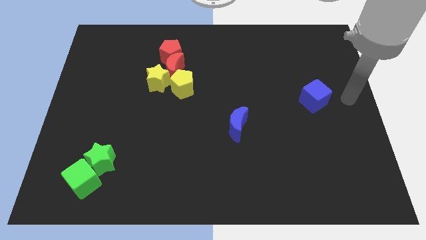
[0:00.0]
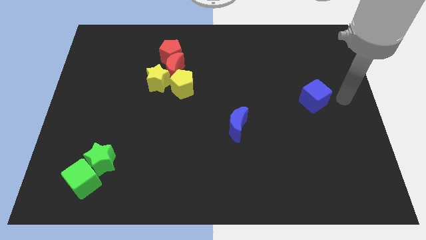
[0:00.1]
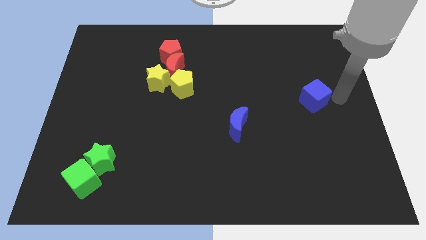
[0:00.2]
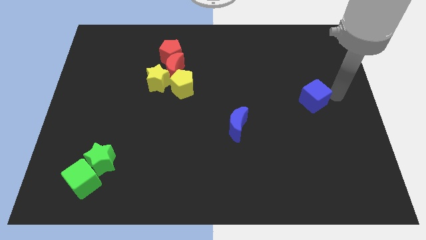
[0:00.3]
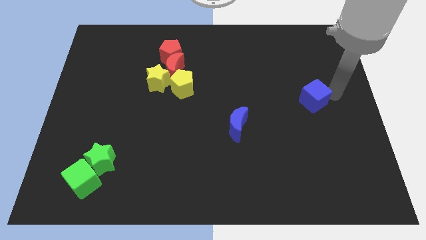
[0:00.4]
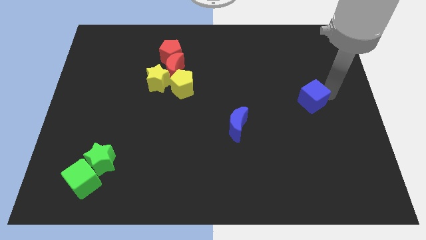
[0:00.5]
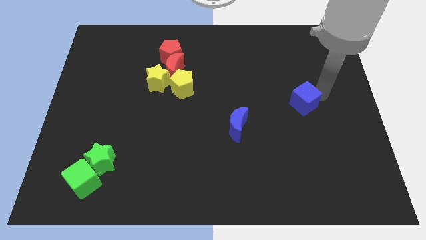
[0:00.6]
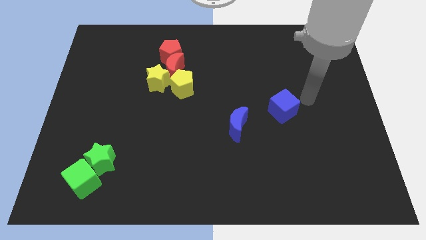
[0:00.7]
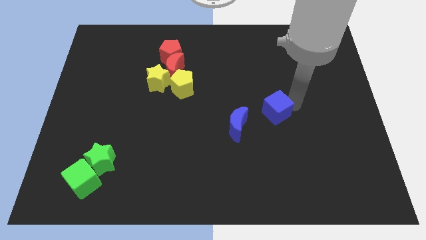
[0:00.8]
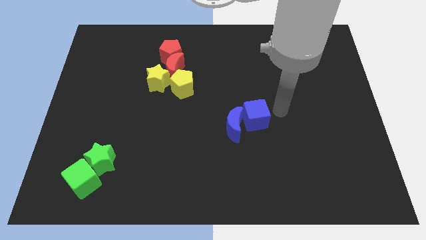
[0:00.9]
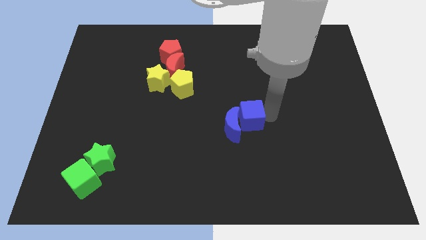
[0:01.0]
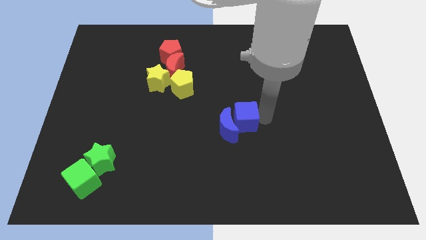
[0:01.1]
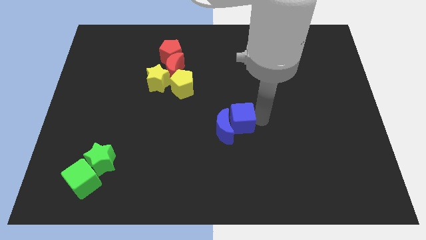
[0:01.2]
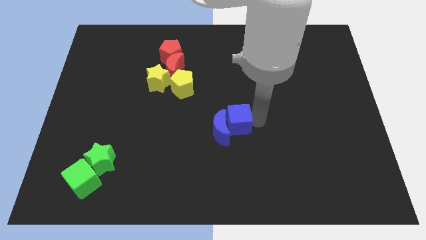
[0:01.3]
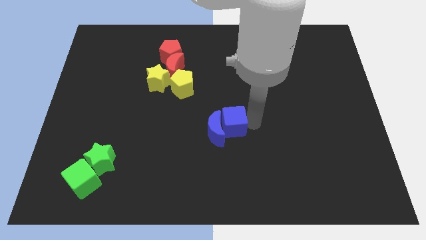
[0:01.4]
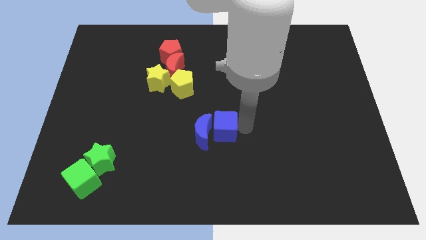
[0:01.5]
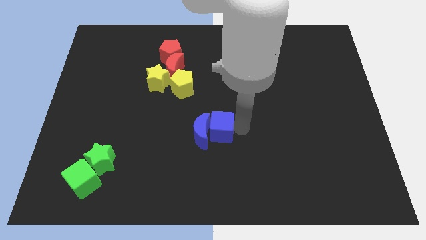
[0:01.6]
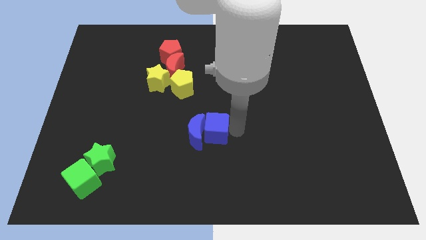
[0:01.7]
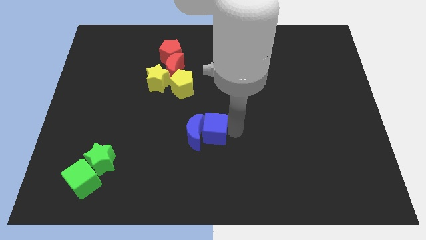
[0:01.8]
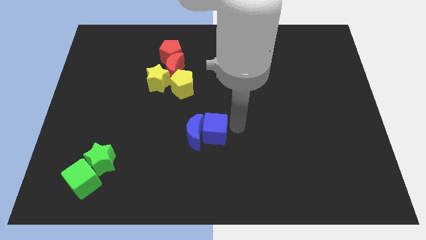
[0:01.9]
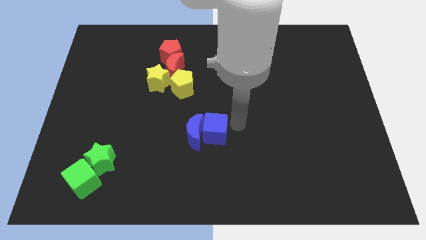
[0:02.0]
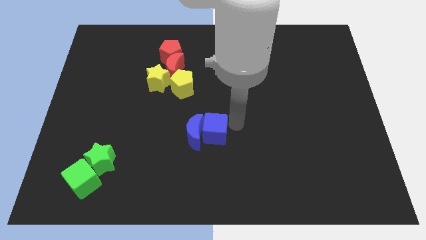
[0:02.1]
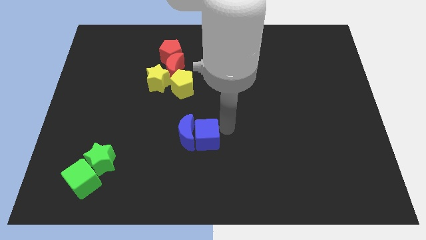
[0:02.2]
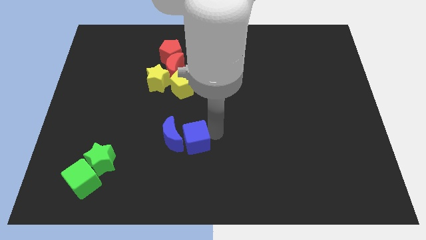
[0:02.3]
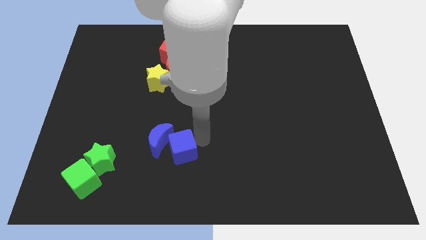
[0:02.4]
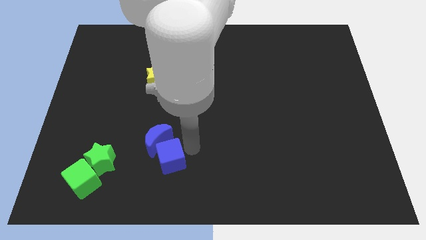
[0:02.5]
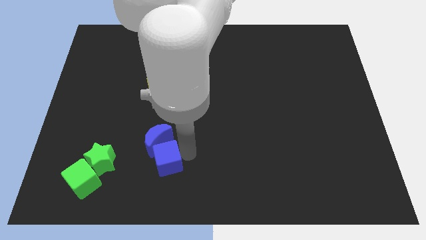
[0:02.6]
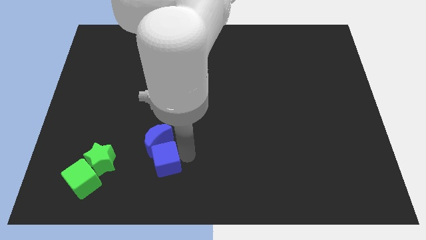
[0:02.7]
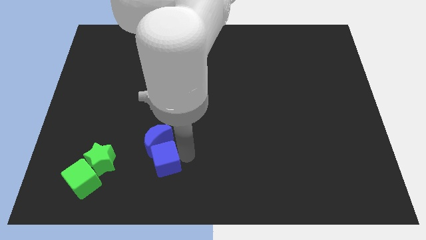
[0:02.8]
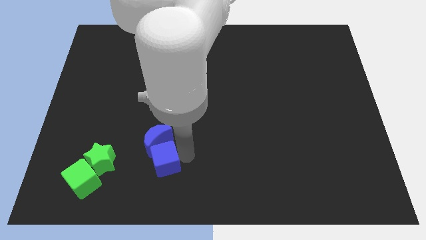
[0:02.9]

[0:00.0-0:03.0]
move blue cube into blue moon

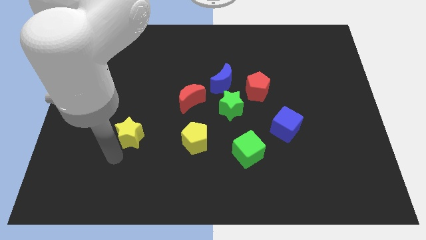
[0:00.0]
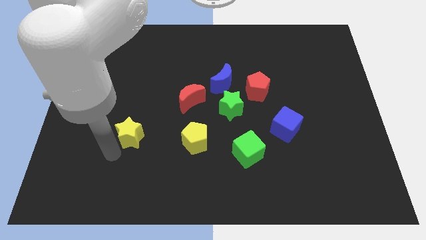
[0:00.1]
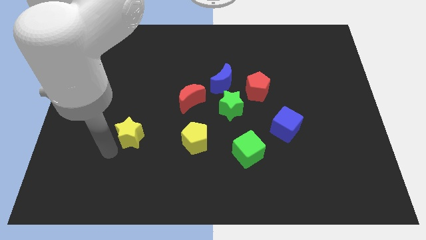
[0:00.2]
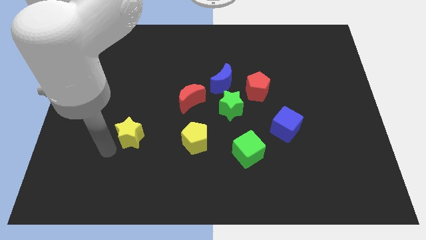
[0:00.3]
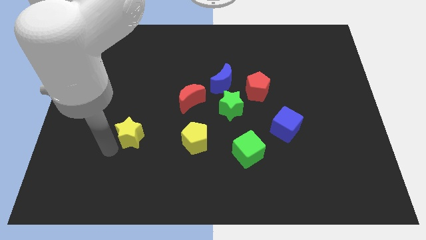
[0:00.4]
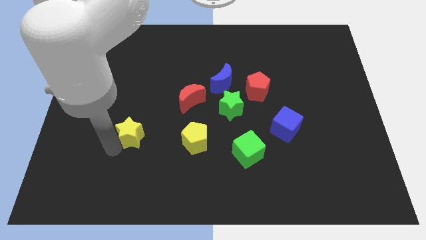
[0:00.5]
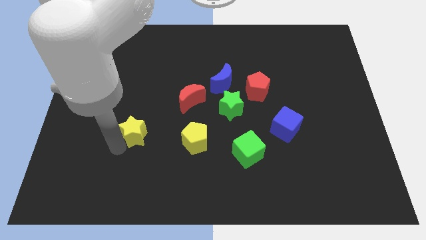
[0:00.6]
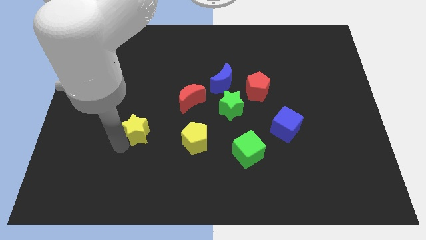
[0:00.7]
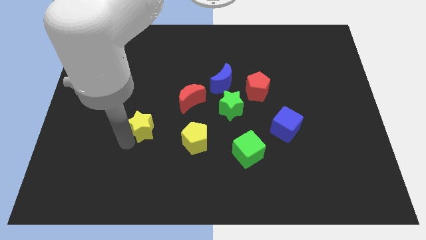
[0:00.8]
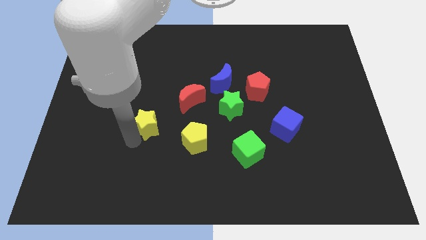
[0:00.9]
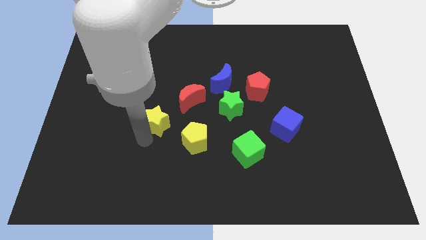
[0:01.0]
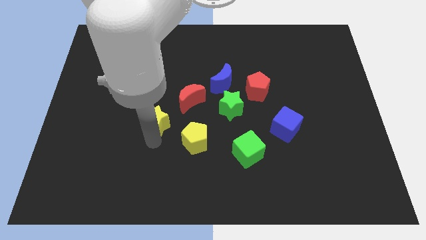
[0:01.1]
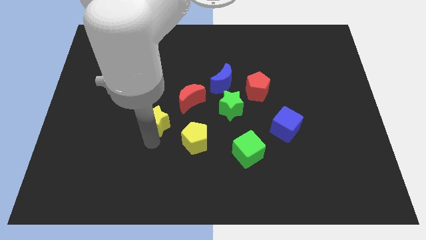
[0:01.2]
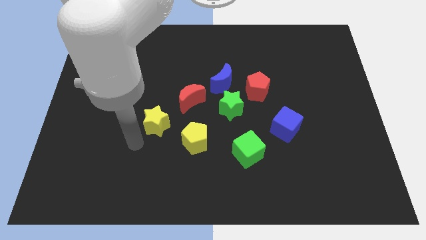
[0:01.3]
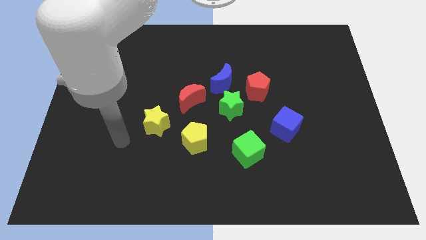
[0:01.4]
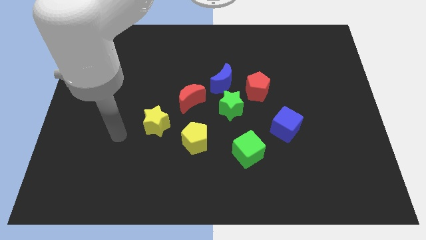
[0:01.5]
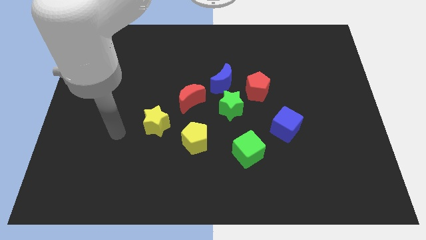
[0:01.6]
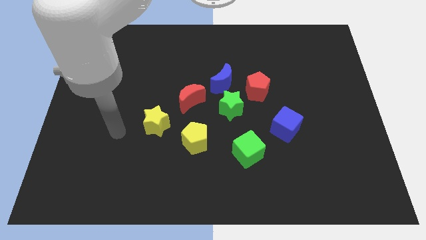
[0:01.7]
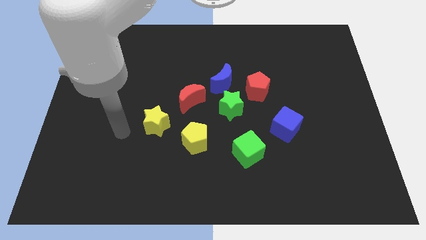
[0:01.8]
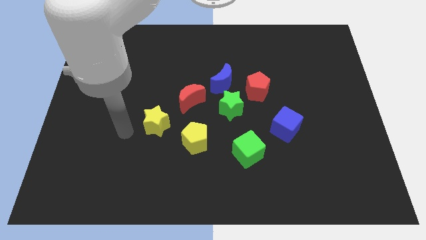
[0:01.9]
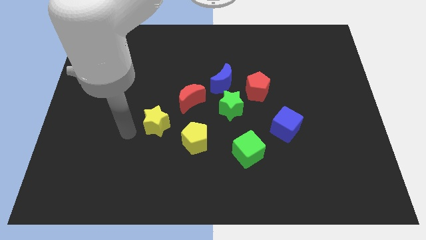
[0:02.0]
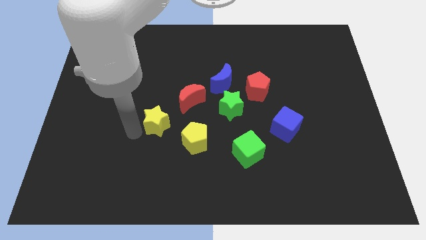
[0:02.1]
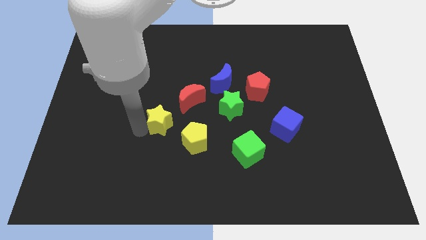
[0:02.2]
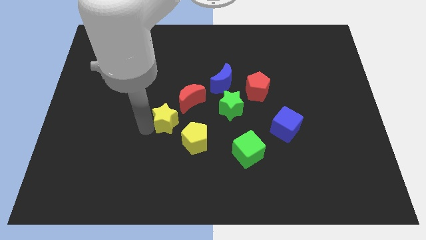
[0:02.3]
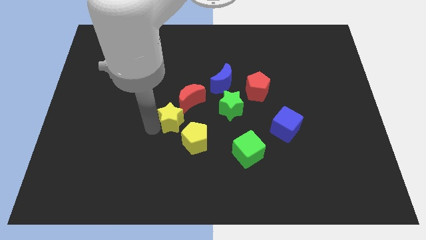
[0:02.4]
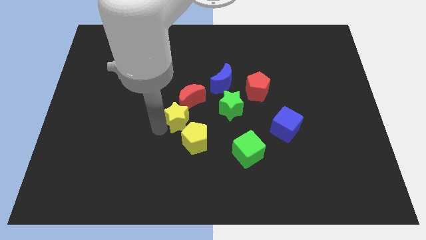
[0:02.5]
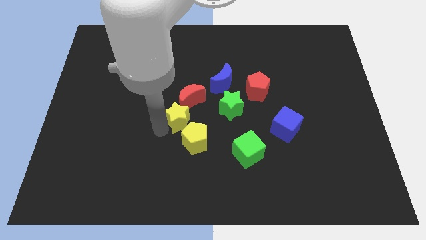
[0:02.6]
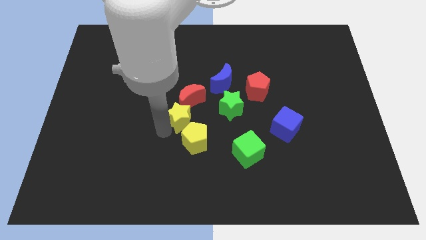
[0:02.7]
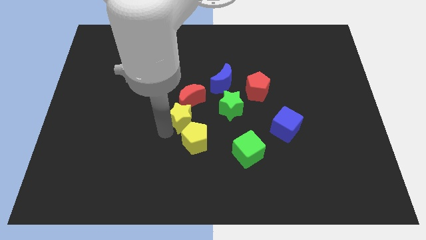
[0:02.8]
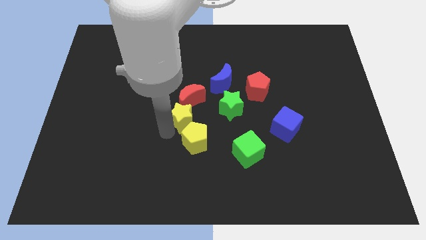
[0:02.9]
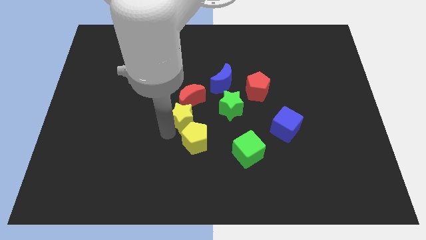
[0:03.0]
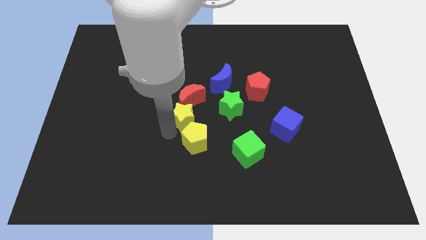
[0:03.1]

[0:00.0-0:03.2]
place the yellow star to the top of the yellow pentagon

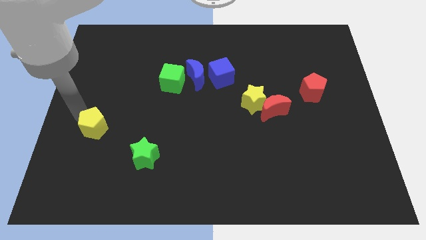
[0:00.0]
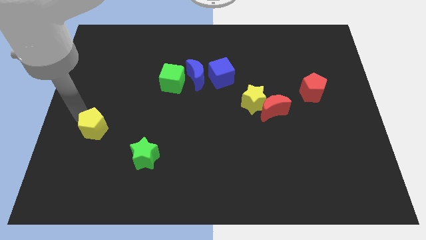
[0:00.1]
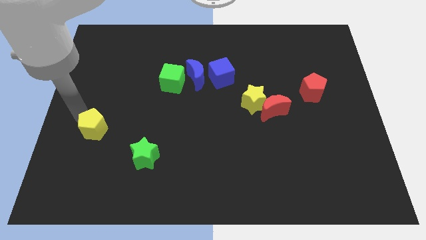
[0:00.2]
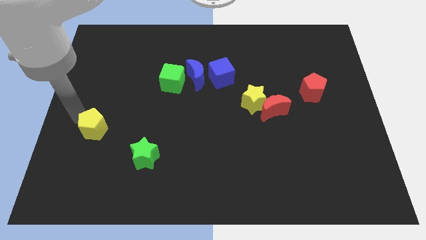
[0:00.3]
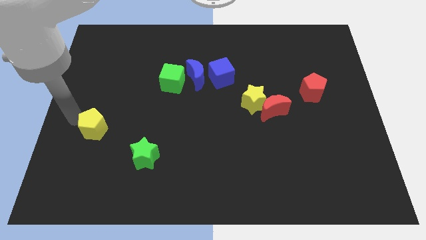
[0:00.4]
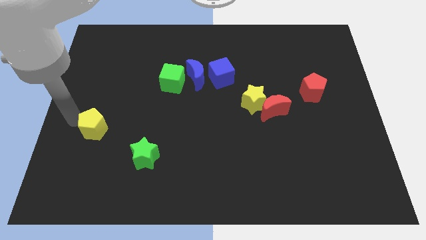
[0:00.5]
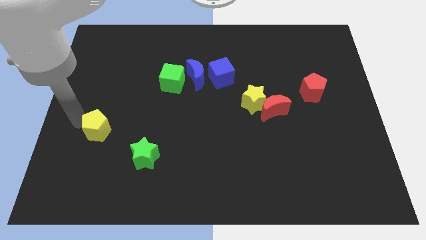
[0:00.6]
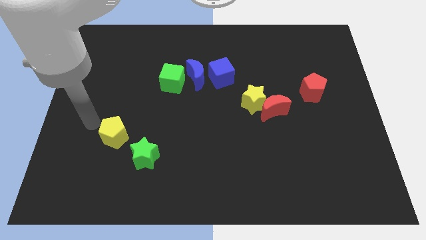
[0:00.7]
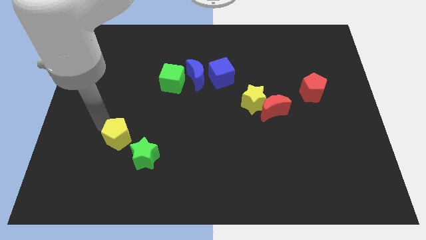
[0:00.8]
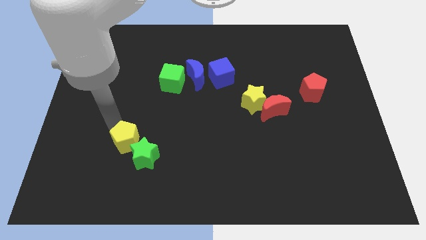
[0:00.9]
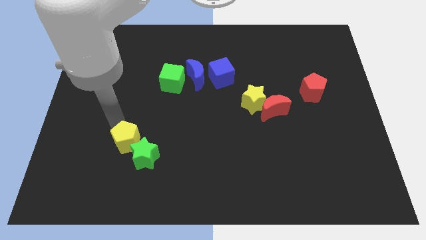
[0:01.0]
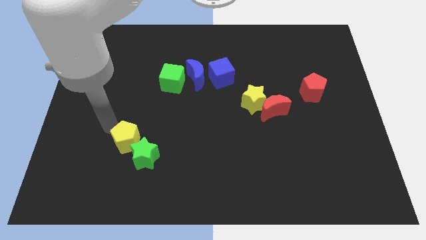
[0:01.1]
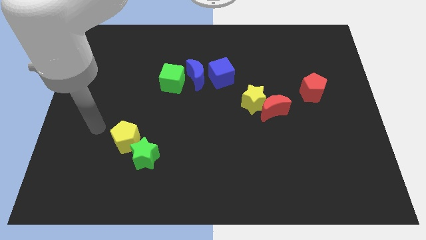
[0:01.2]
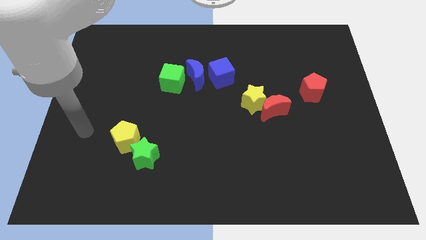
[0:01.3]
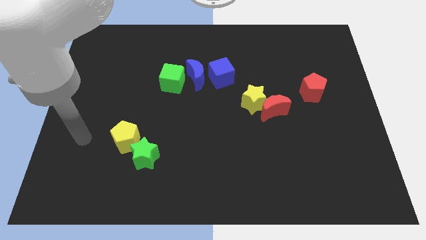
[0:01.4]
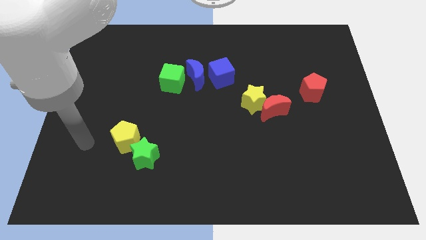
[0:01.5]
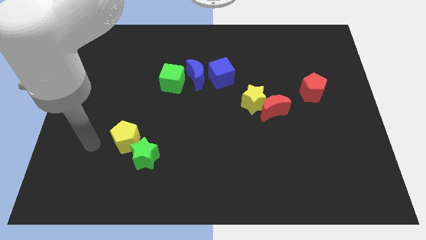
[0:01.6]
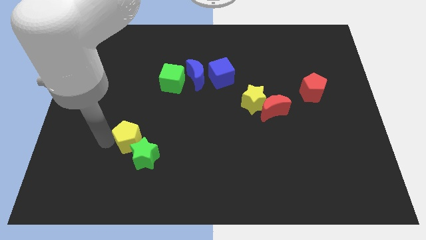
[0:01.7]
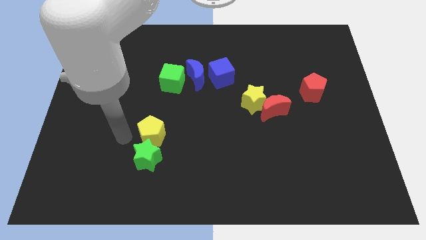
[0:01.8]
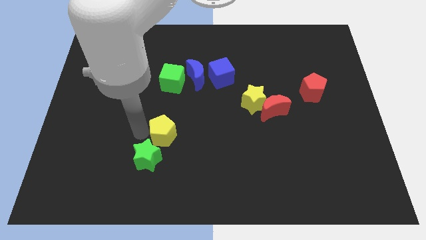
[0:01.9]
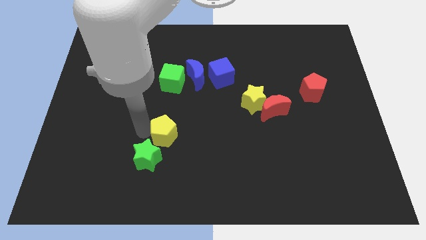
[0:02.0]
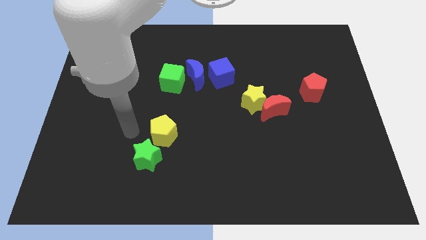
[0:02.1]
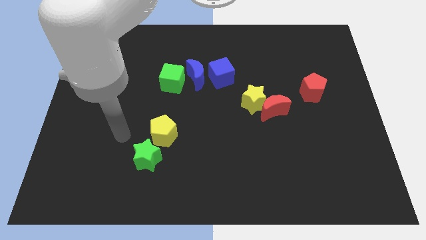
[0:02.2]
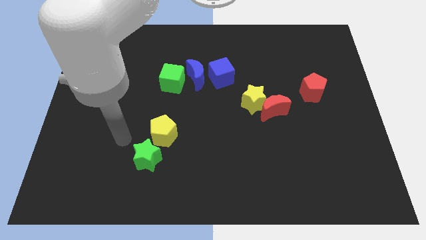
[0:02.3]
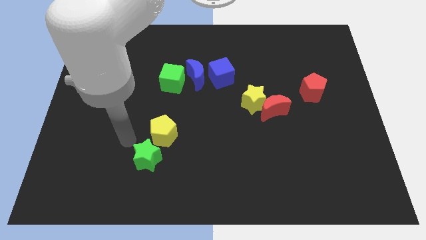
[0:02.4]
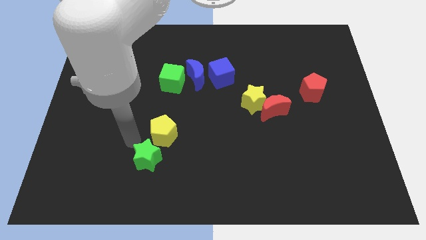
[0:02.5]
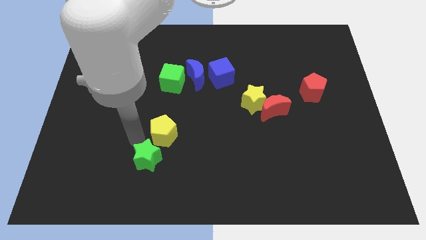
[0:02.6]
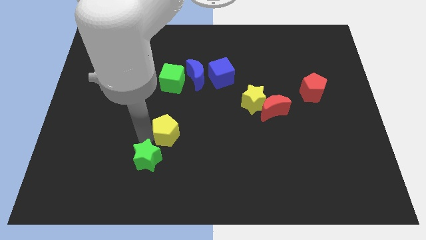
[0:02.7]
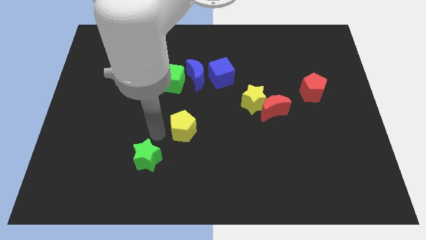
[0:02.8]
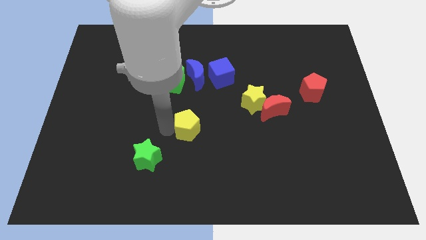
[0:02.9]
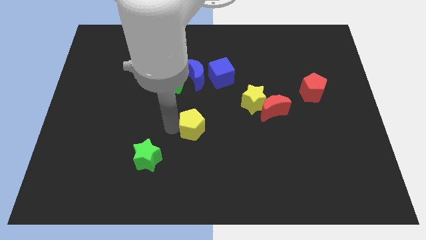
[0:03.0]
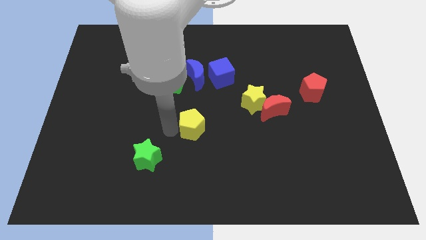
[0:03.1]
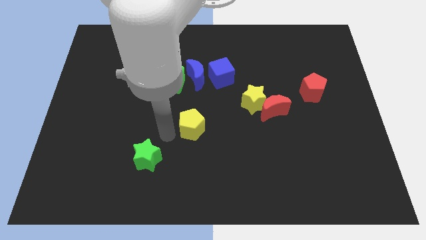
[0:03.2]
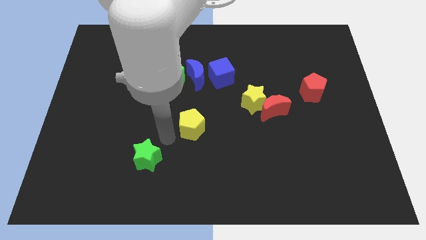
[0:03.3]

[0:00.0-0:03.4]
move the yellow pentagon towards the center of the board
